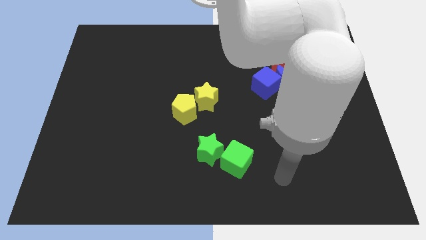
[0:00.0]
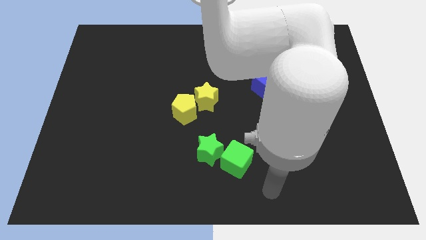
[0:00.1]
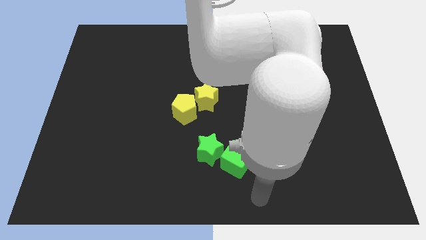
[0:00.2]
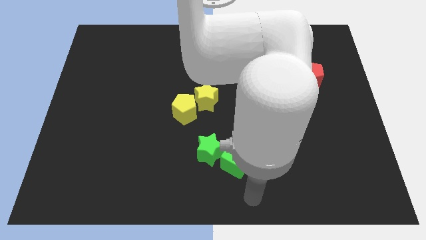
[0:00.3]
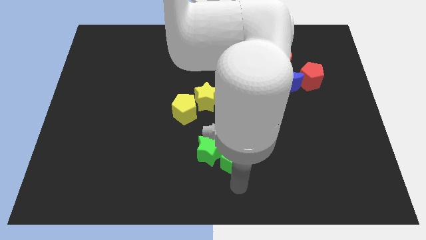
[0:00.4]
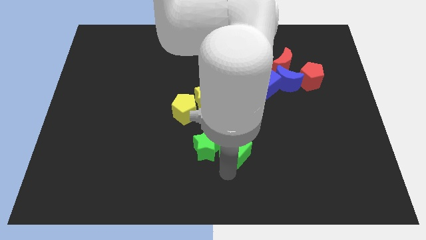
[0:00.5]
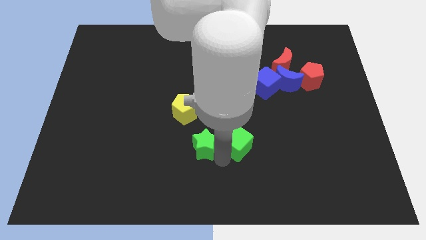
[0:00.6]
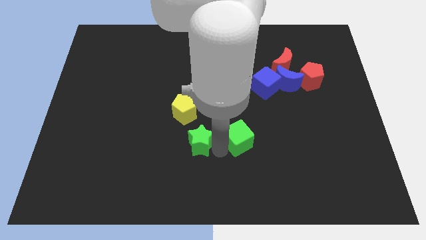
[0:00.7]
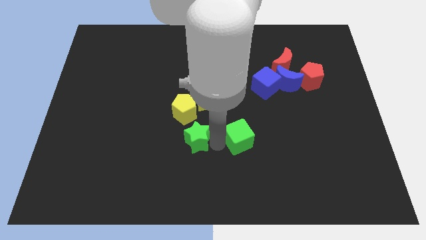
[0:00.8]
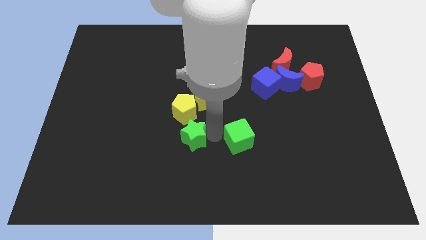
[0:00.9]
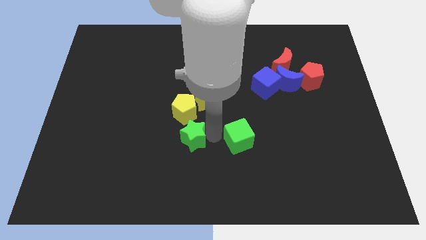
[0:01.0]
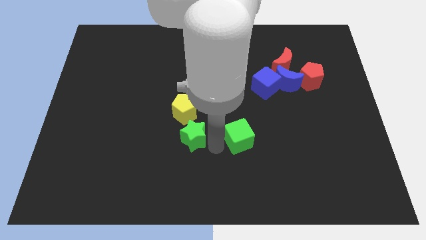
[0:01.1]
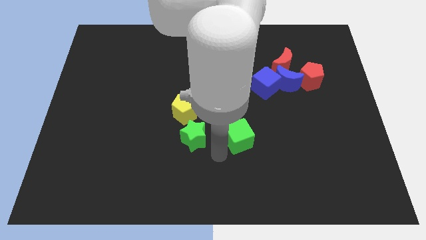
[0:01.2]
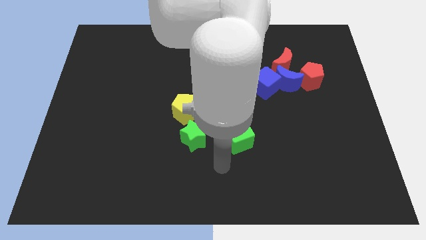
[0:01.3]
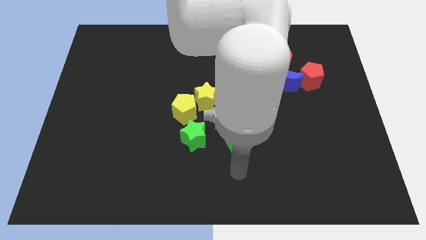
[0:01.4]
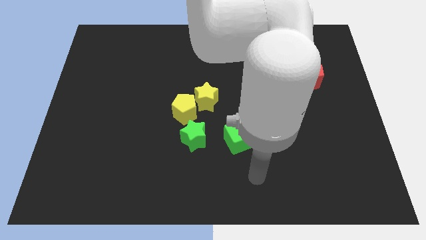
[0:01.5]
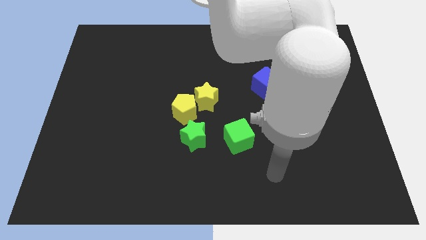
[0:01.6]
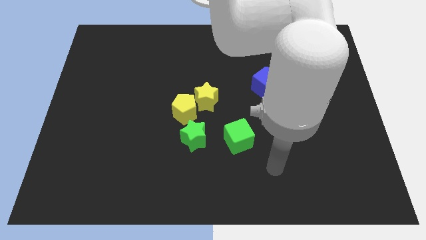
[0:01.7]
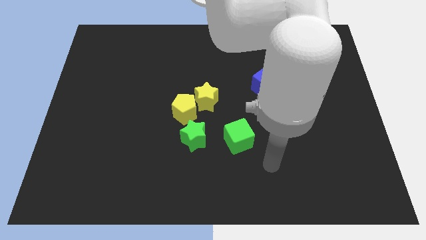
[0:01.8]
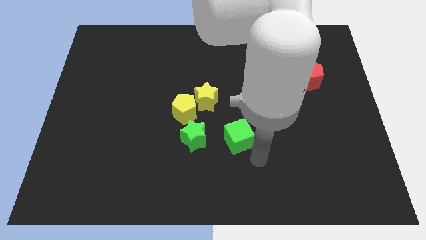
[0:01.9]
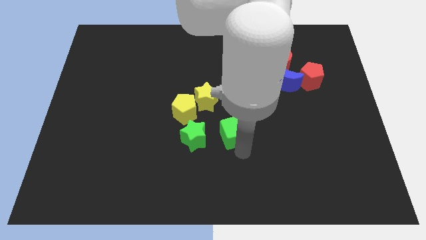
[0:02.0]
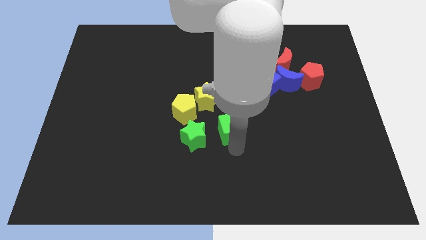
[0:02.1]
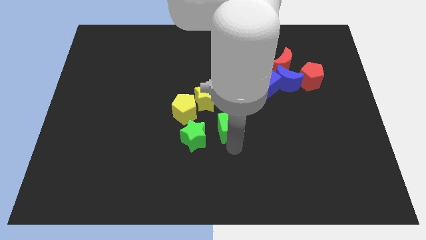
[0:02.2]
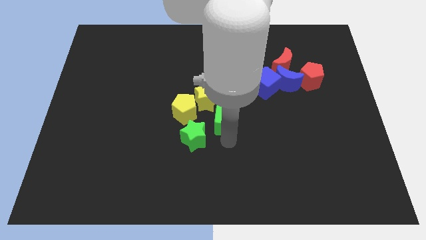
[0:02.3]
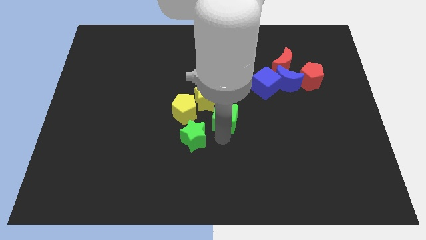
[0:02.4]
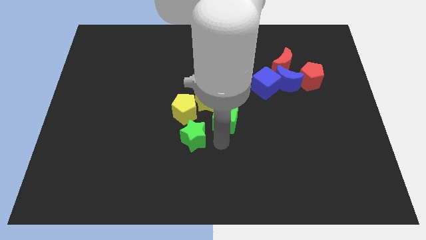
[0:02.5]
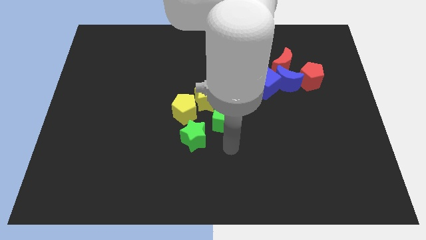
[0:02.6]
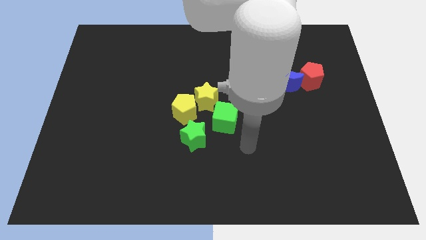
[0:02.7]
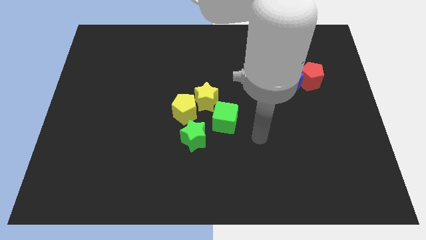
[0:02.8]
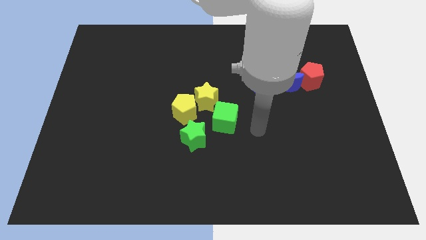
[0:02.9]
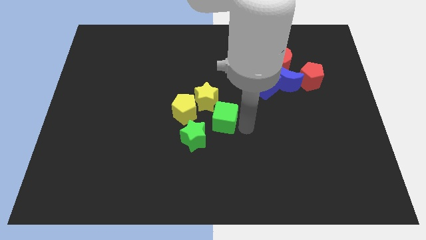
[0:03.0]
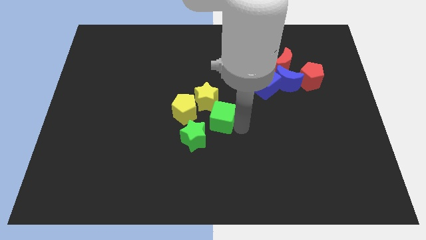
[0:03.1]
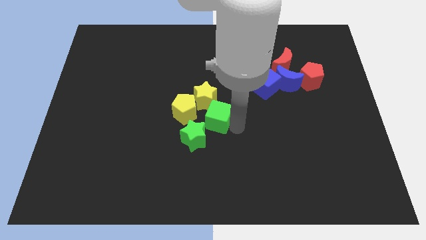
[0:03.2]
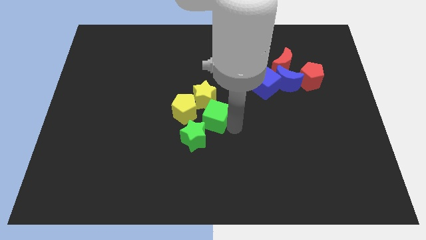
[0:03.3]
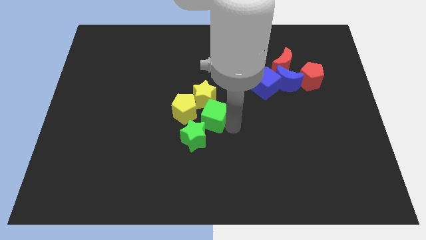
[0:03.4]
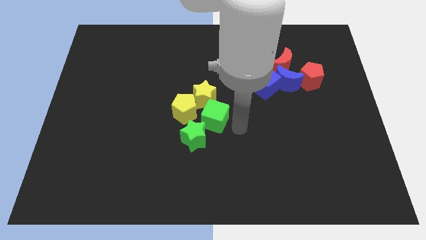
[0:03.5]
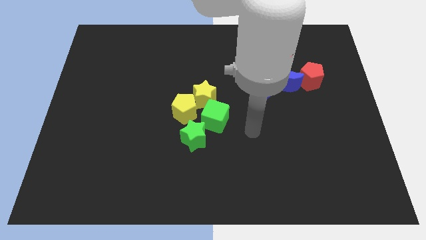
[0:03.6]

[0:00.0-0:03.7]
slide the green cube diagonally top right to the green star

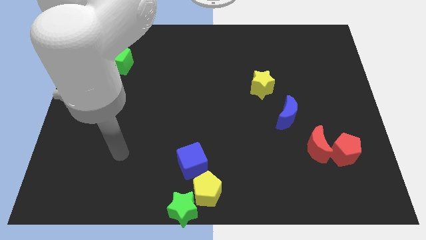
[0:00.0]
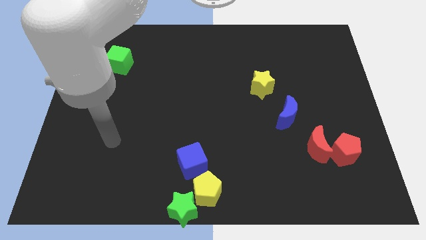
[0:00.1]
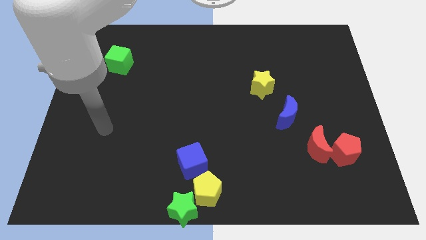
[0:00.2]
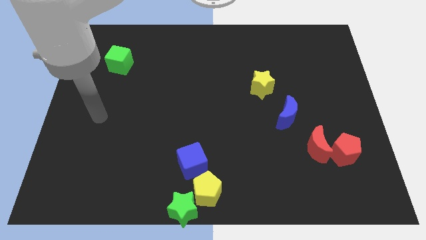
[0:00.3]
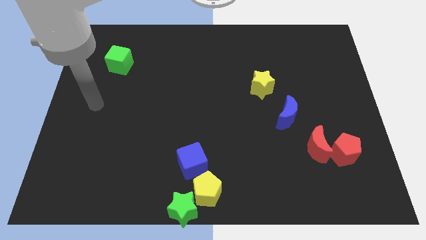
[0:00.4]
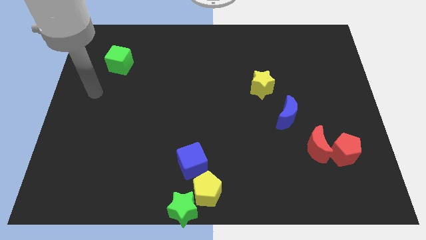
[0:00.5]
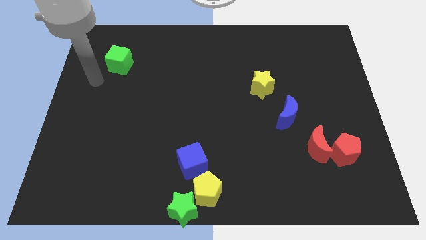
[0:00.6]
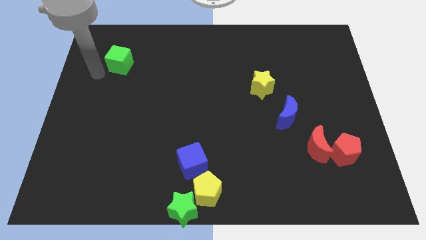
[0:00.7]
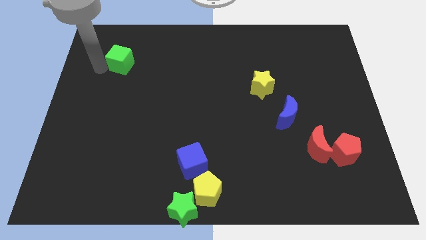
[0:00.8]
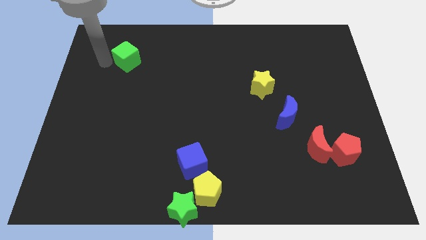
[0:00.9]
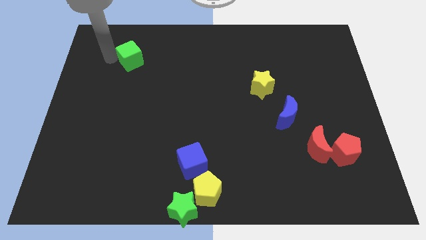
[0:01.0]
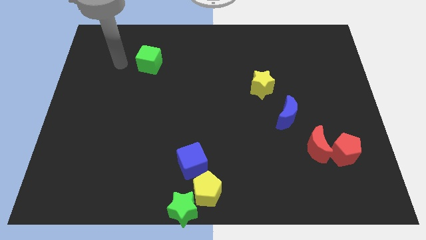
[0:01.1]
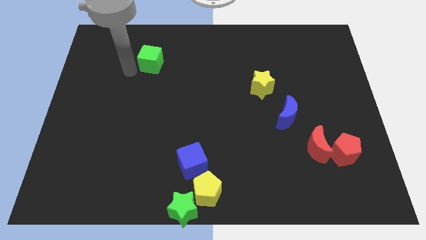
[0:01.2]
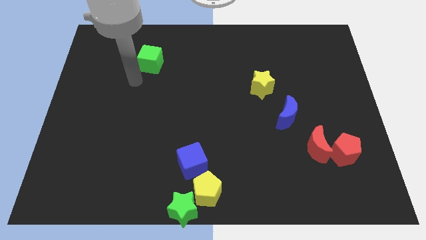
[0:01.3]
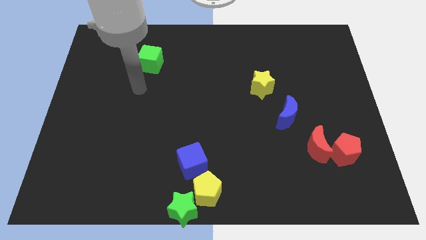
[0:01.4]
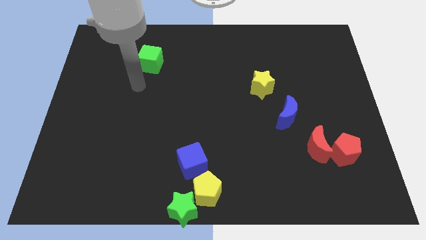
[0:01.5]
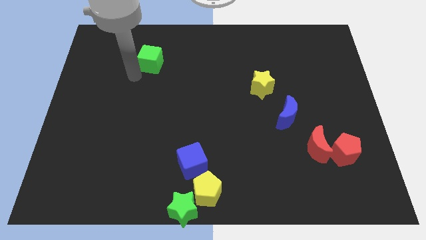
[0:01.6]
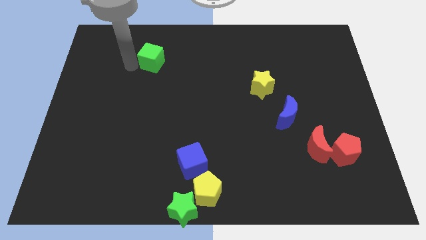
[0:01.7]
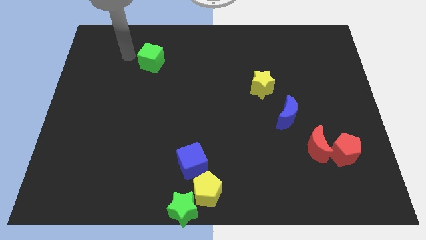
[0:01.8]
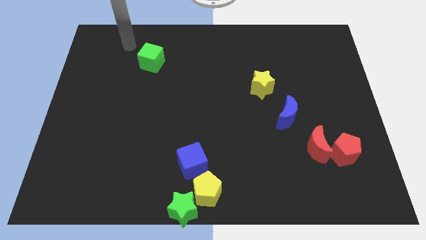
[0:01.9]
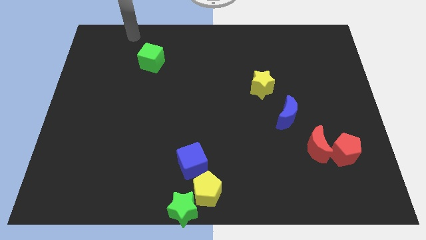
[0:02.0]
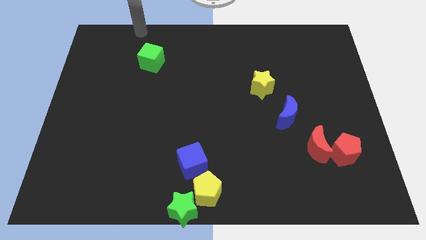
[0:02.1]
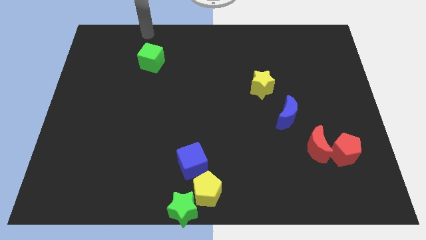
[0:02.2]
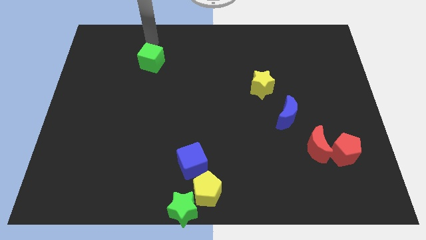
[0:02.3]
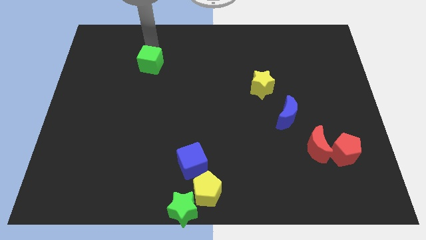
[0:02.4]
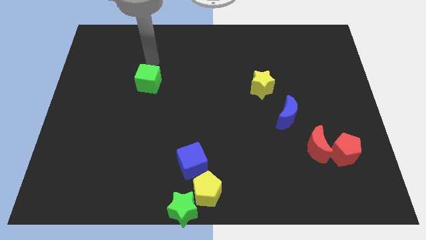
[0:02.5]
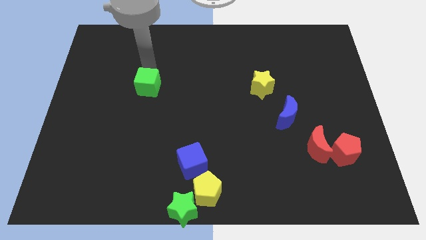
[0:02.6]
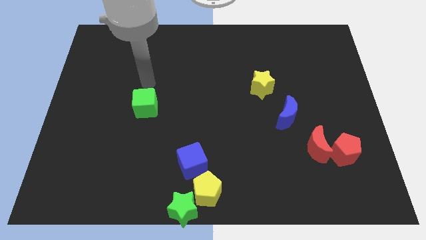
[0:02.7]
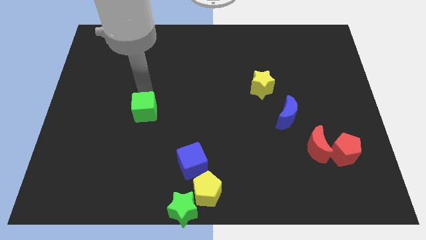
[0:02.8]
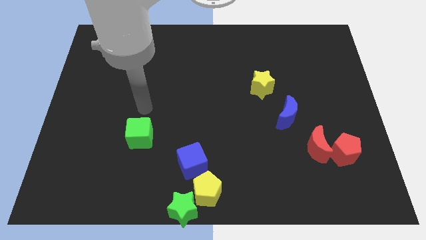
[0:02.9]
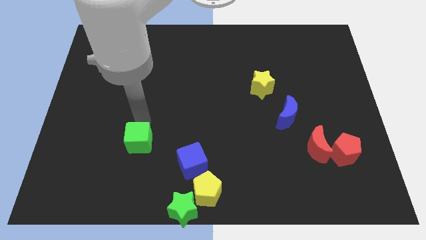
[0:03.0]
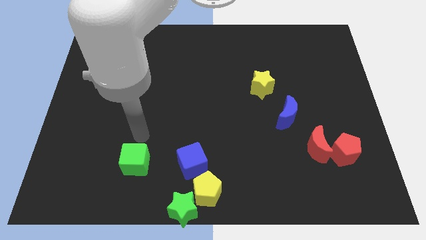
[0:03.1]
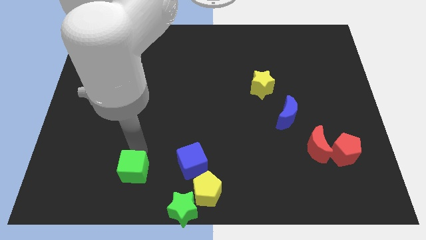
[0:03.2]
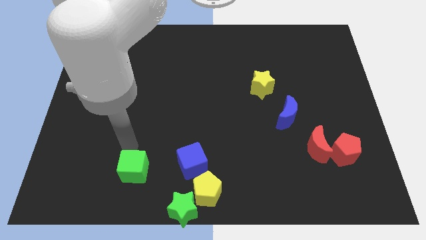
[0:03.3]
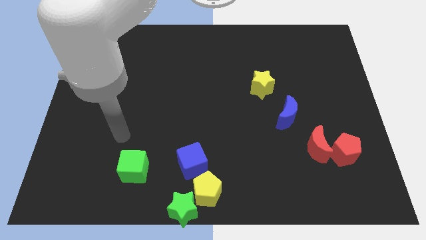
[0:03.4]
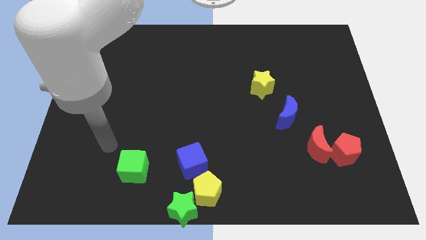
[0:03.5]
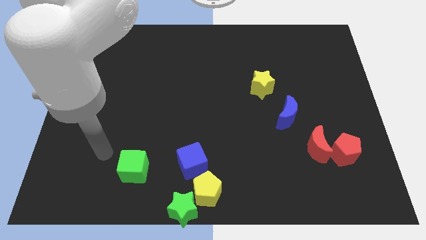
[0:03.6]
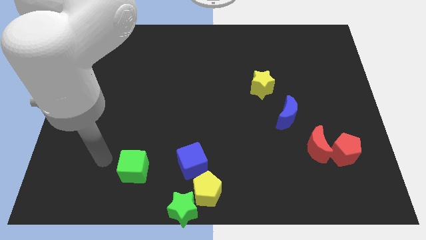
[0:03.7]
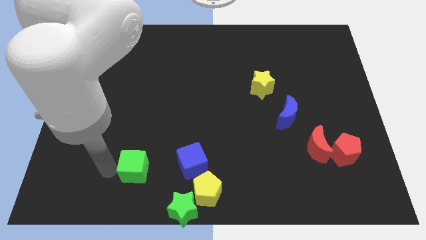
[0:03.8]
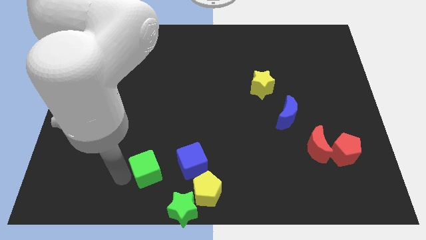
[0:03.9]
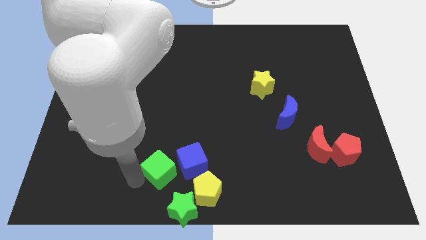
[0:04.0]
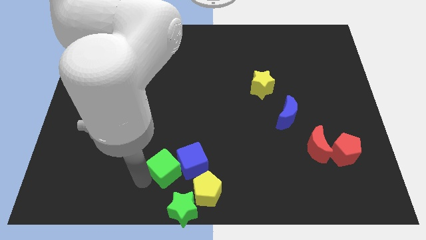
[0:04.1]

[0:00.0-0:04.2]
place the green cube to the left side of the blue cube

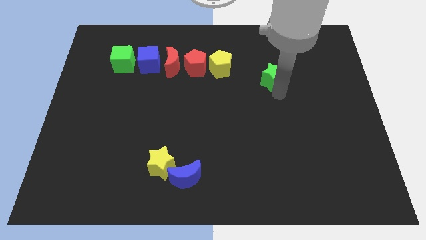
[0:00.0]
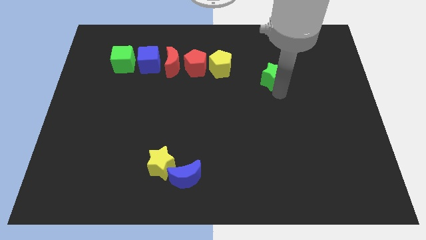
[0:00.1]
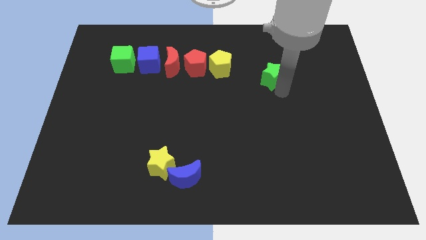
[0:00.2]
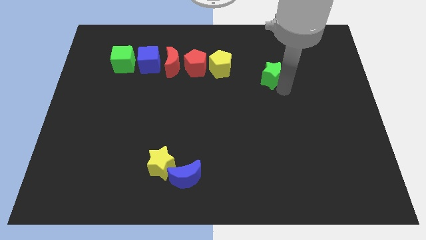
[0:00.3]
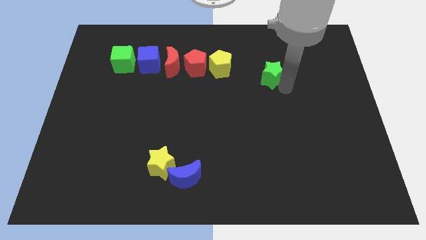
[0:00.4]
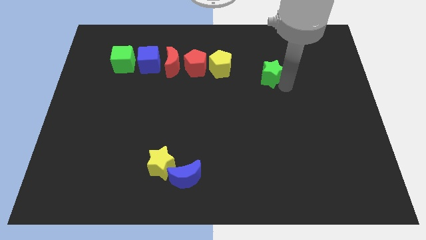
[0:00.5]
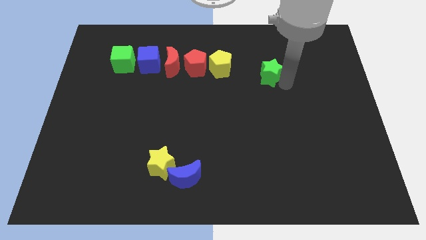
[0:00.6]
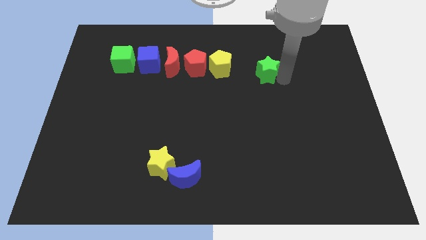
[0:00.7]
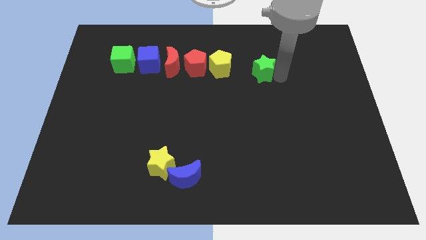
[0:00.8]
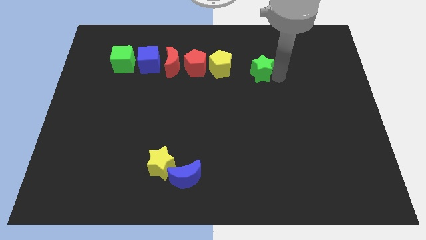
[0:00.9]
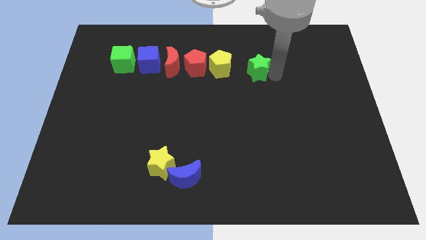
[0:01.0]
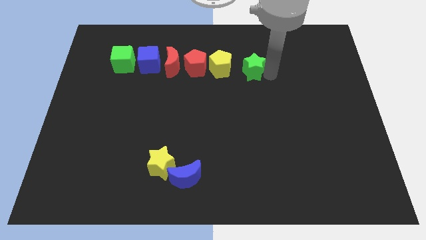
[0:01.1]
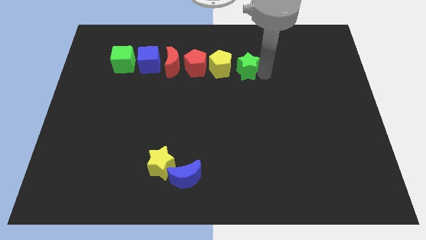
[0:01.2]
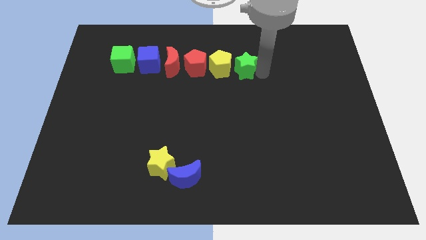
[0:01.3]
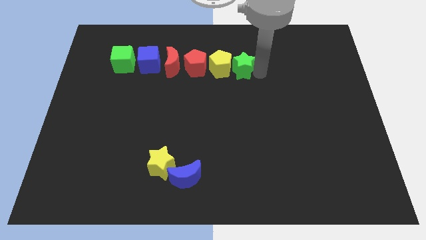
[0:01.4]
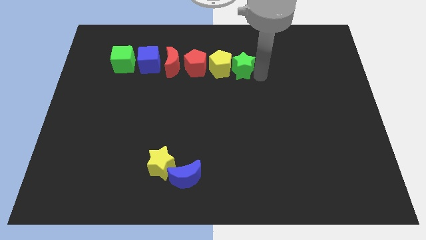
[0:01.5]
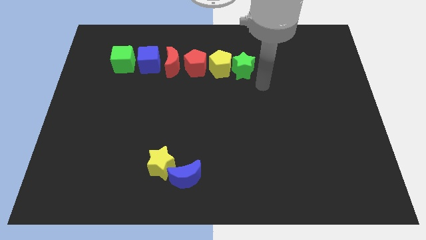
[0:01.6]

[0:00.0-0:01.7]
place green star to the right of yellow pentagon
